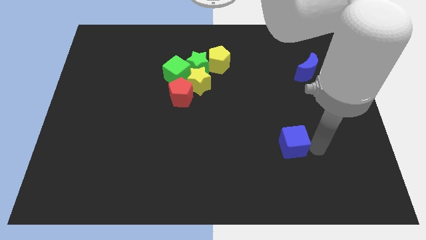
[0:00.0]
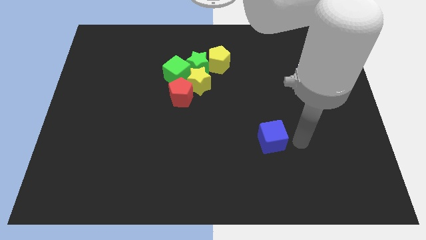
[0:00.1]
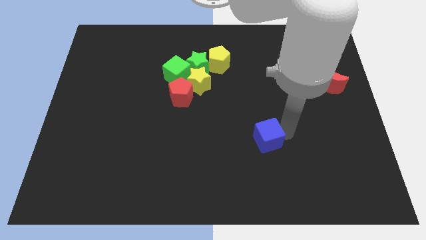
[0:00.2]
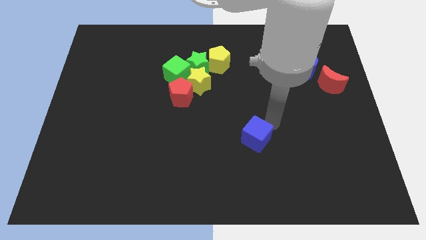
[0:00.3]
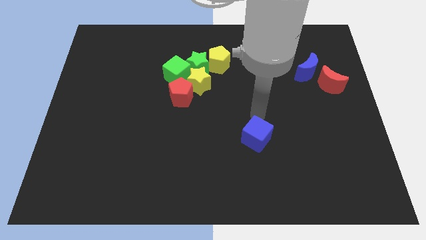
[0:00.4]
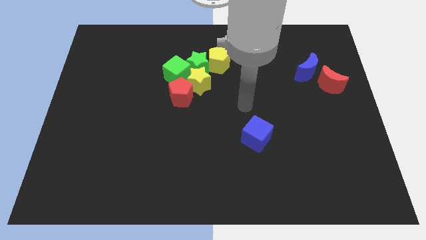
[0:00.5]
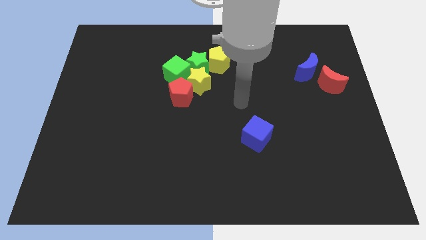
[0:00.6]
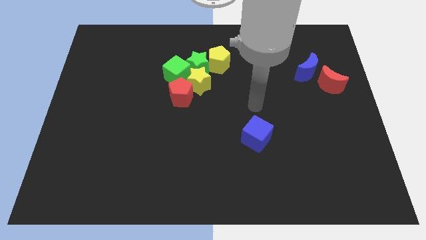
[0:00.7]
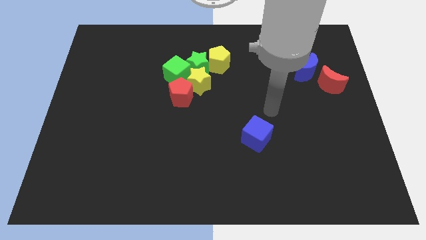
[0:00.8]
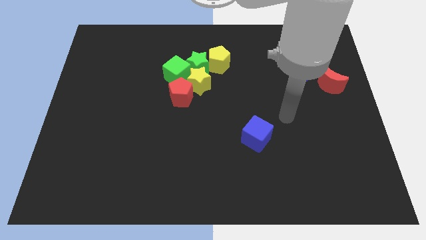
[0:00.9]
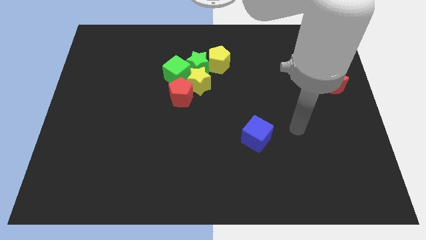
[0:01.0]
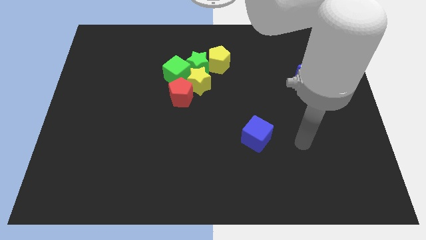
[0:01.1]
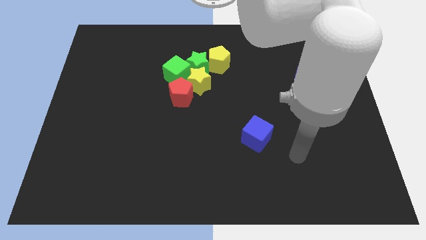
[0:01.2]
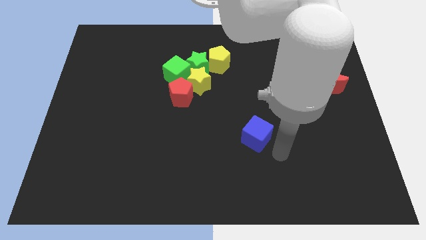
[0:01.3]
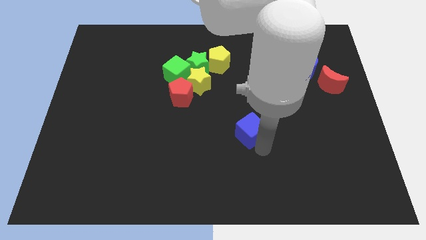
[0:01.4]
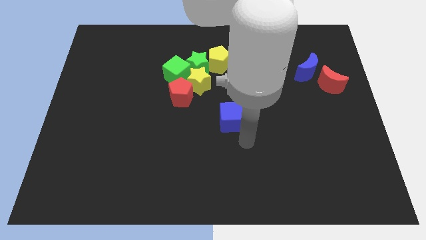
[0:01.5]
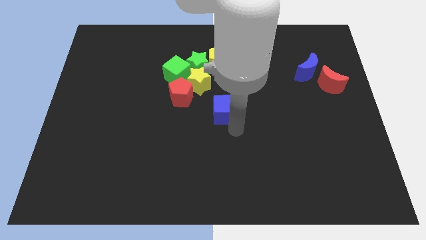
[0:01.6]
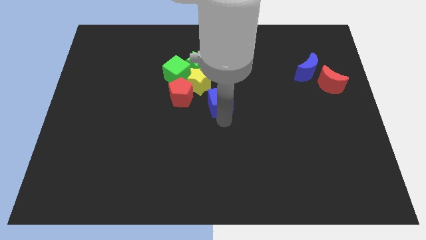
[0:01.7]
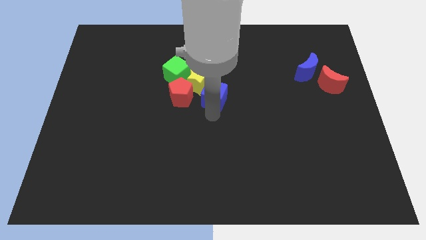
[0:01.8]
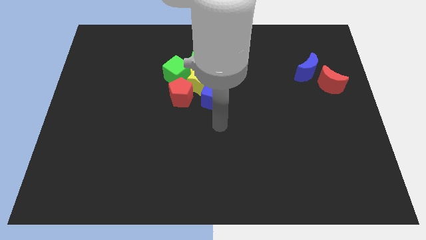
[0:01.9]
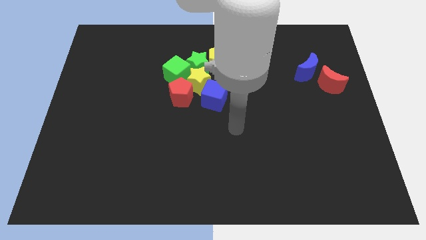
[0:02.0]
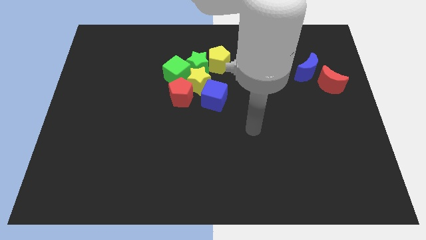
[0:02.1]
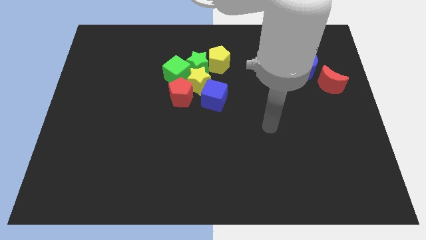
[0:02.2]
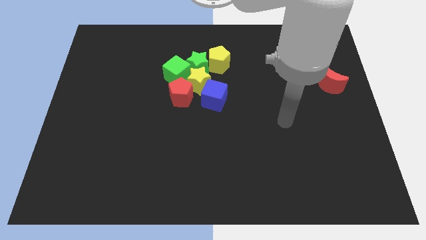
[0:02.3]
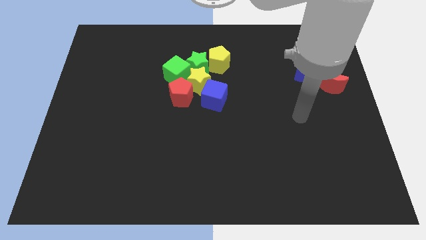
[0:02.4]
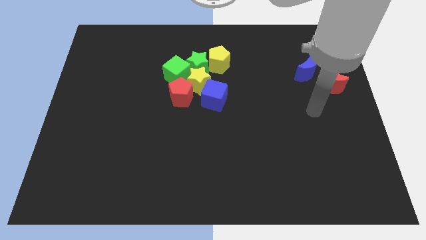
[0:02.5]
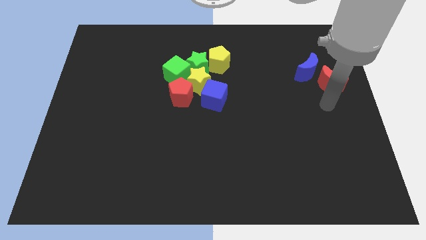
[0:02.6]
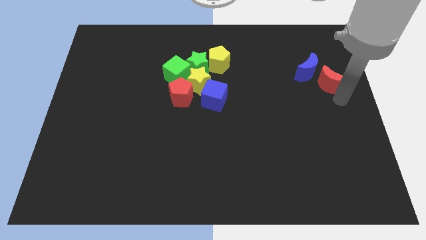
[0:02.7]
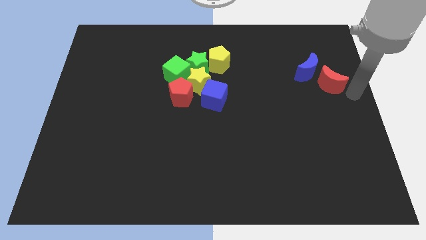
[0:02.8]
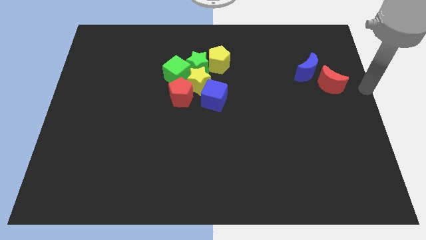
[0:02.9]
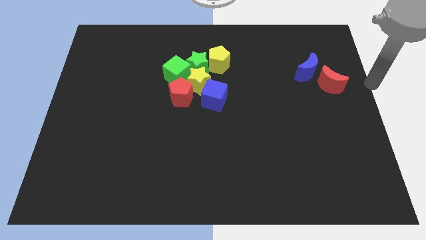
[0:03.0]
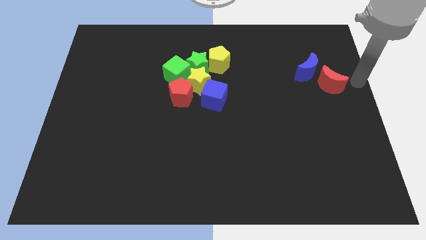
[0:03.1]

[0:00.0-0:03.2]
push the blue cube to the bottom right to the yellow star

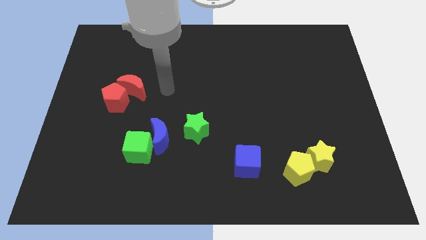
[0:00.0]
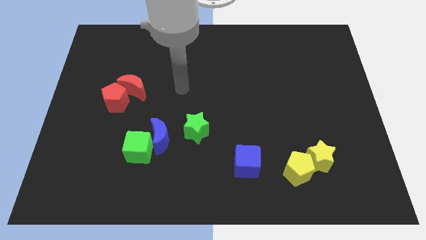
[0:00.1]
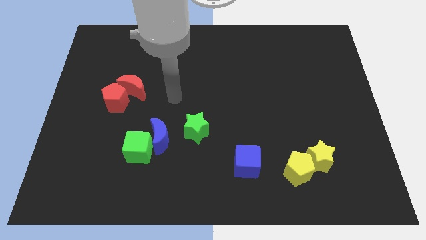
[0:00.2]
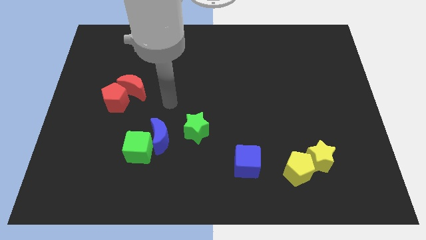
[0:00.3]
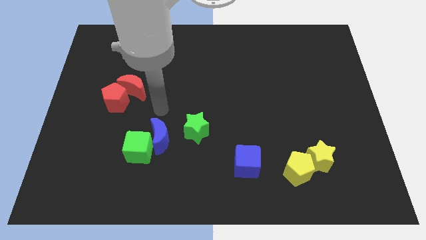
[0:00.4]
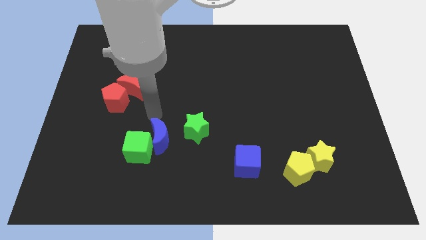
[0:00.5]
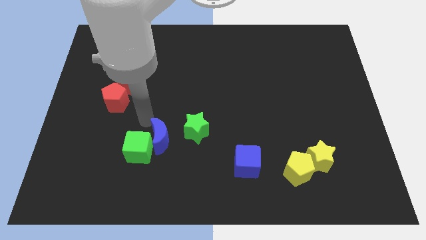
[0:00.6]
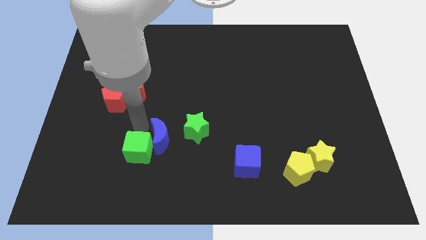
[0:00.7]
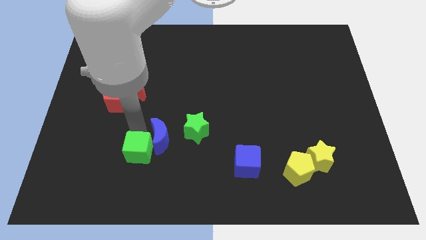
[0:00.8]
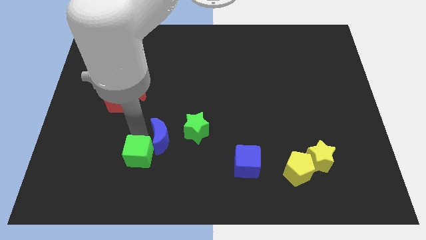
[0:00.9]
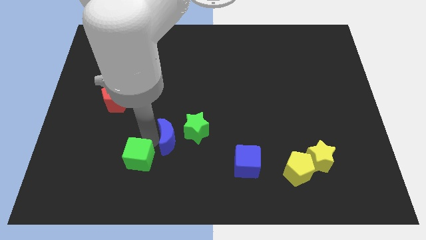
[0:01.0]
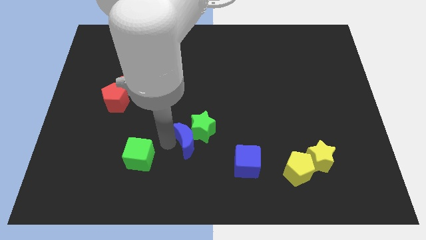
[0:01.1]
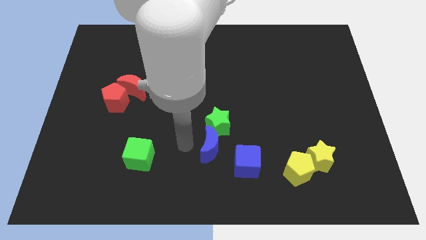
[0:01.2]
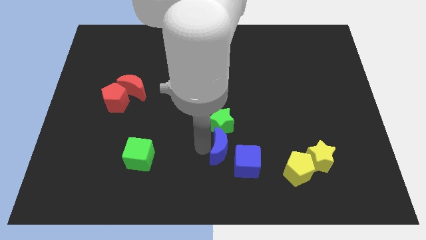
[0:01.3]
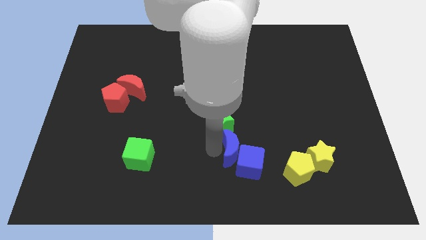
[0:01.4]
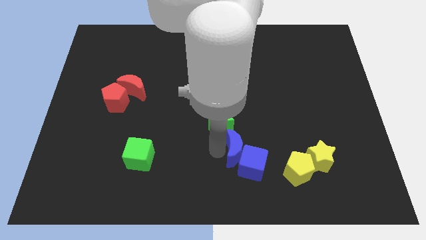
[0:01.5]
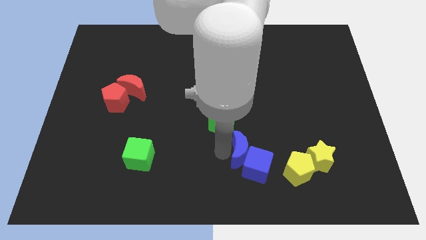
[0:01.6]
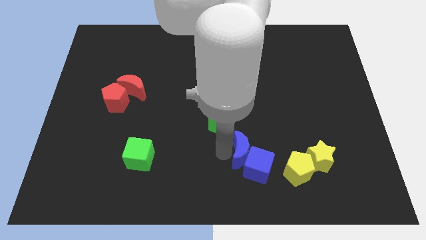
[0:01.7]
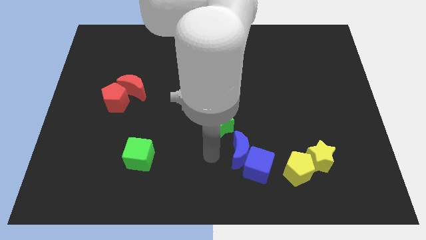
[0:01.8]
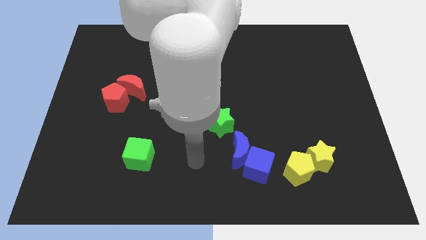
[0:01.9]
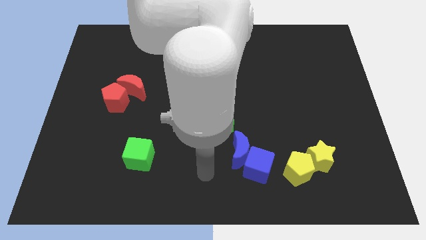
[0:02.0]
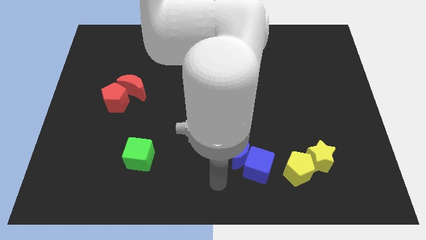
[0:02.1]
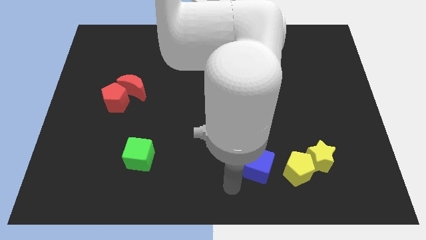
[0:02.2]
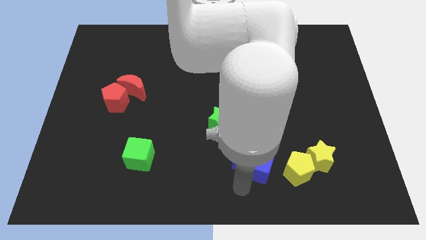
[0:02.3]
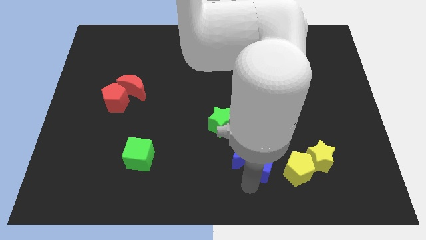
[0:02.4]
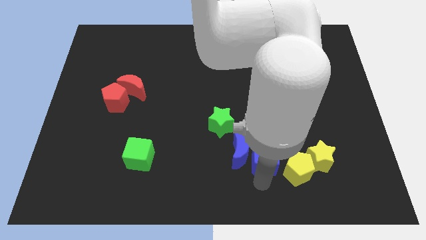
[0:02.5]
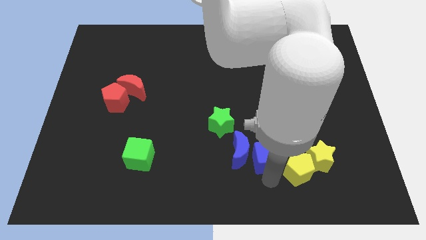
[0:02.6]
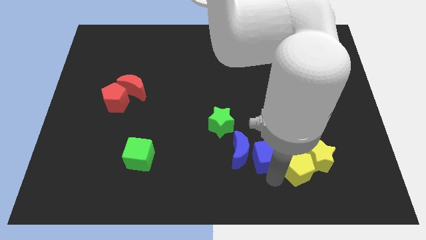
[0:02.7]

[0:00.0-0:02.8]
move the blue crescent into the blue cube

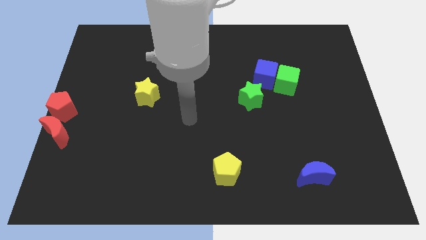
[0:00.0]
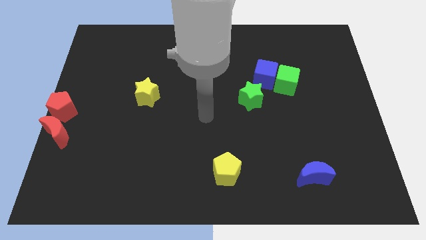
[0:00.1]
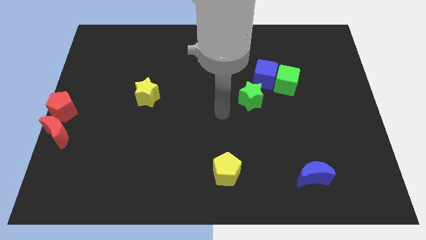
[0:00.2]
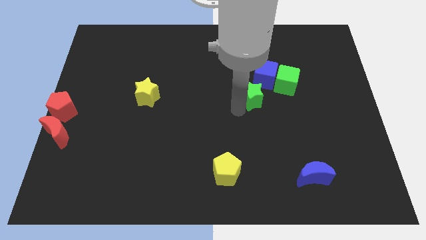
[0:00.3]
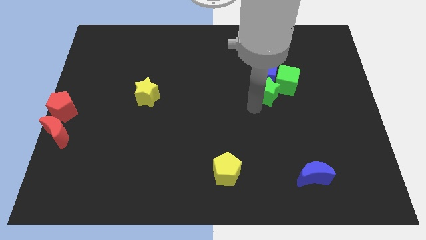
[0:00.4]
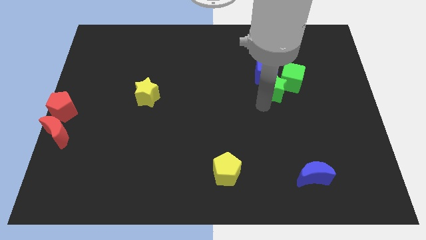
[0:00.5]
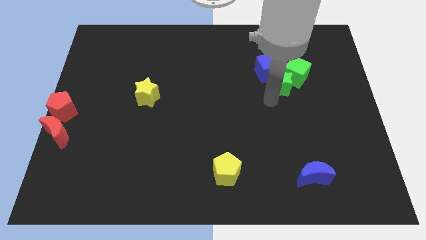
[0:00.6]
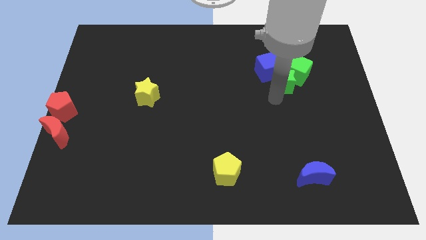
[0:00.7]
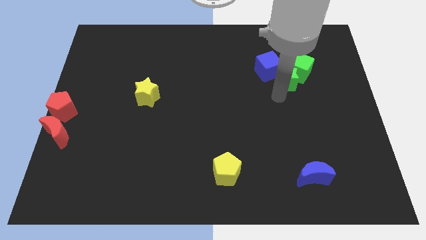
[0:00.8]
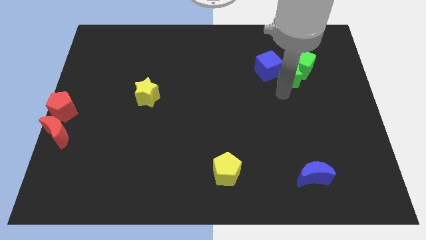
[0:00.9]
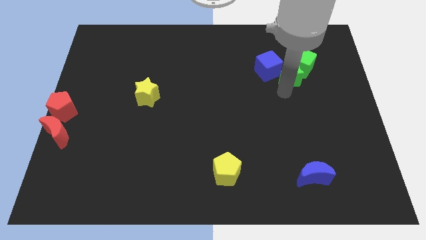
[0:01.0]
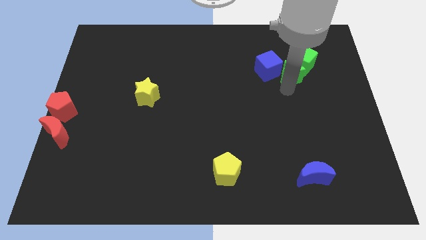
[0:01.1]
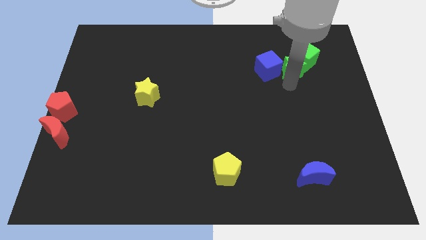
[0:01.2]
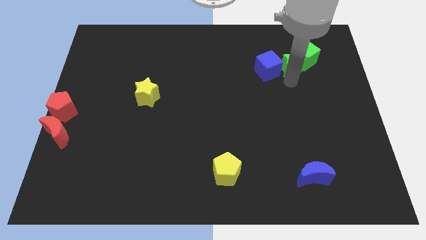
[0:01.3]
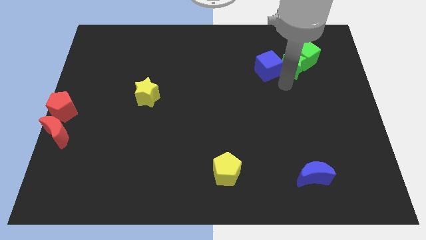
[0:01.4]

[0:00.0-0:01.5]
push the green star into the green cube

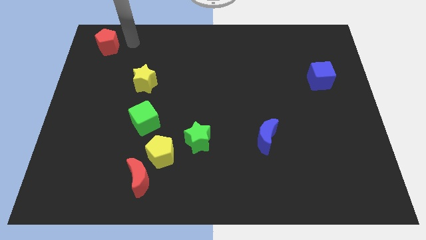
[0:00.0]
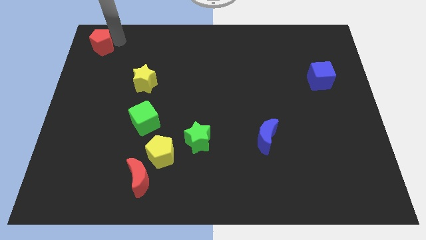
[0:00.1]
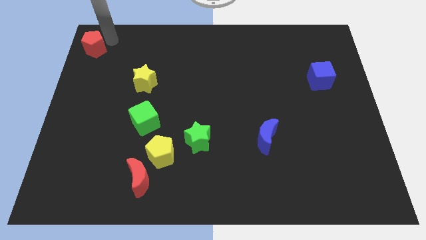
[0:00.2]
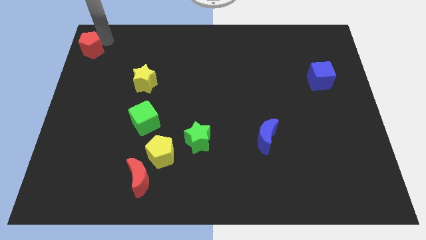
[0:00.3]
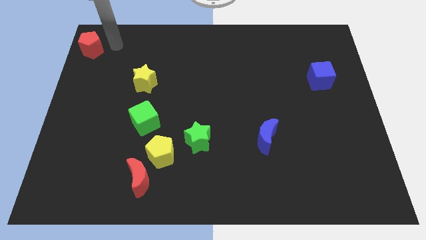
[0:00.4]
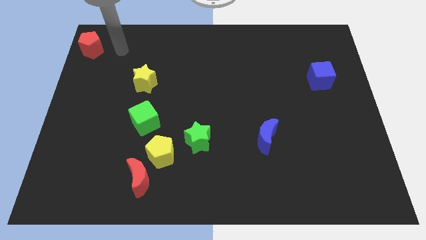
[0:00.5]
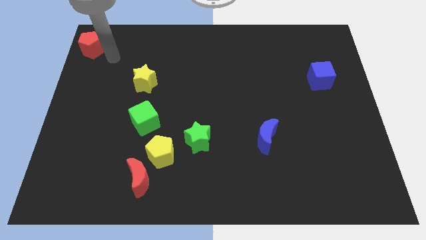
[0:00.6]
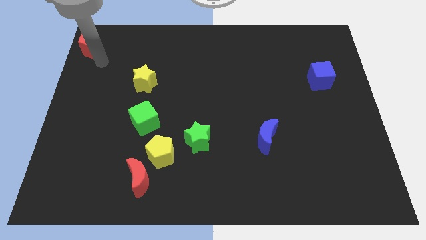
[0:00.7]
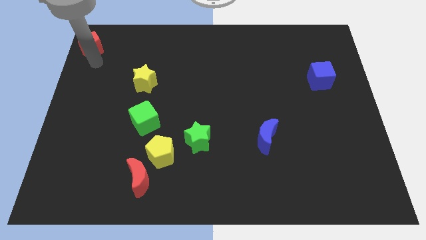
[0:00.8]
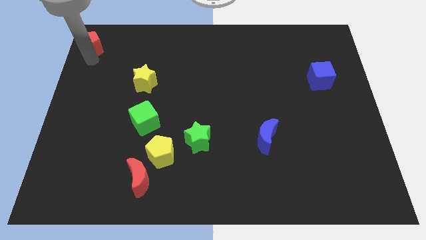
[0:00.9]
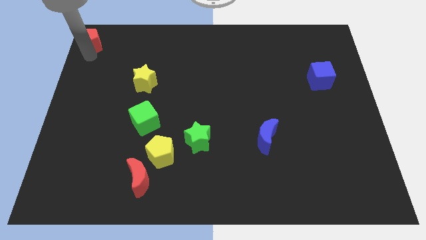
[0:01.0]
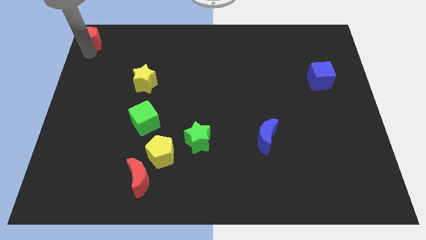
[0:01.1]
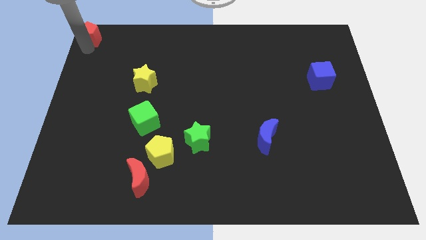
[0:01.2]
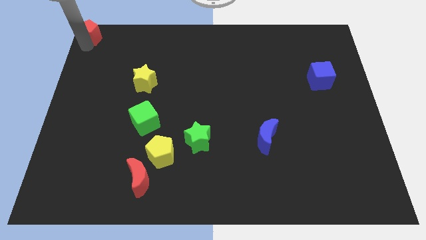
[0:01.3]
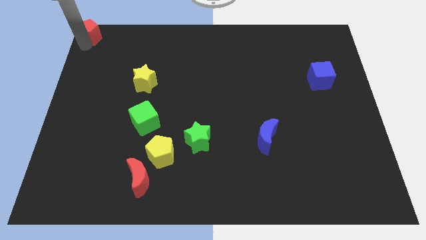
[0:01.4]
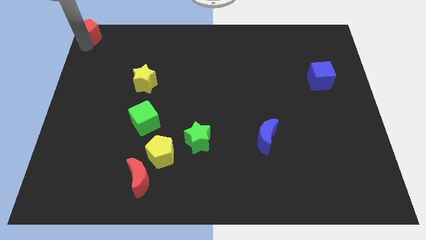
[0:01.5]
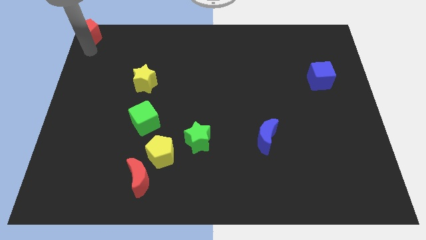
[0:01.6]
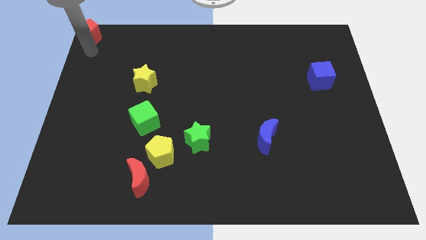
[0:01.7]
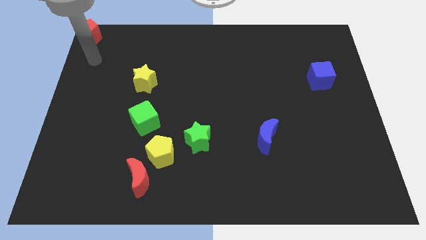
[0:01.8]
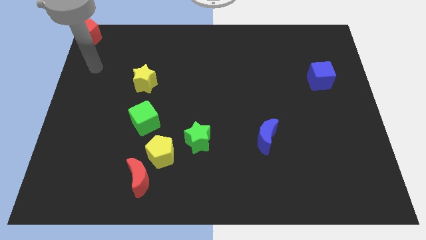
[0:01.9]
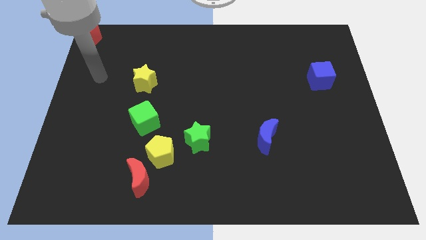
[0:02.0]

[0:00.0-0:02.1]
slide red pentagon to the top left corner of the board
